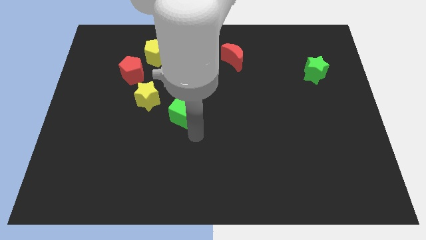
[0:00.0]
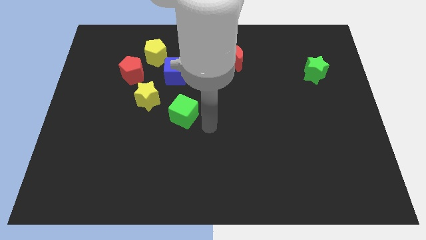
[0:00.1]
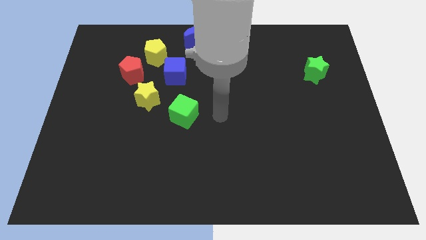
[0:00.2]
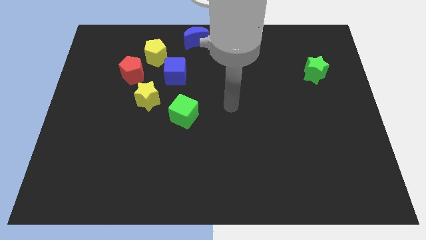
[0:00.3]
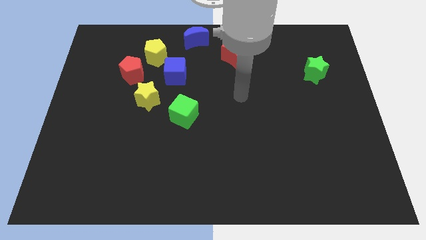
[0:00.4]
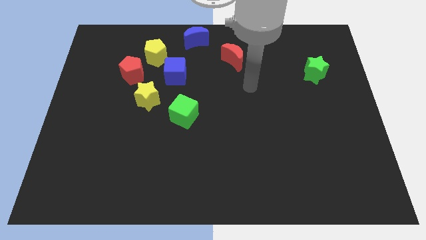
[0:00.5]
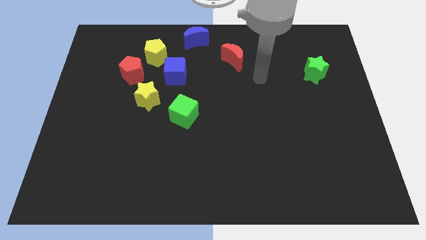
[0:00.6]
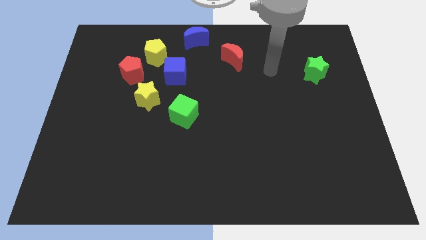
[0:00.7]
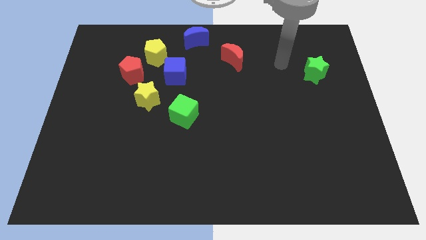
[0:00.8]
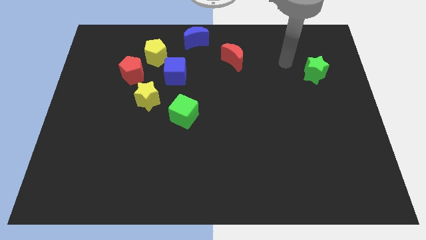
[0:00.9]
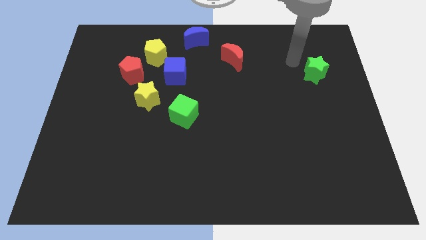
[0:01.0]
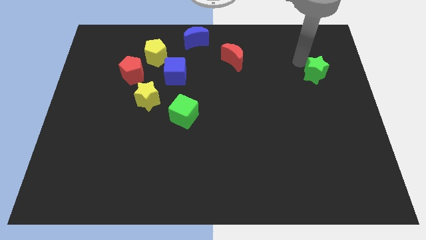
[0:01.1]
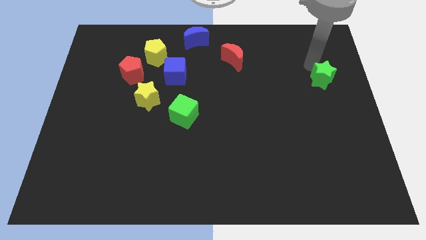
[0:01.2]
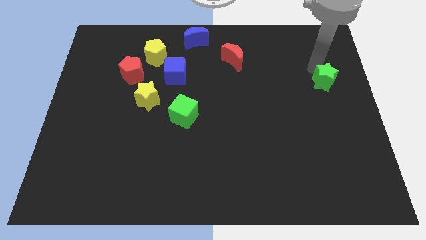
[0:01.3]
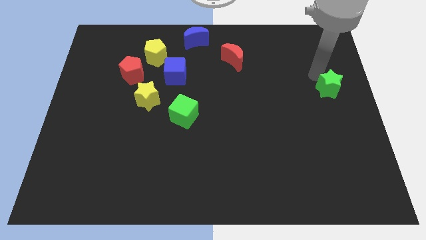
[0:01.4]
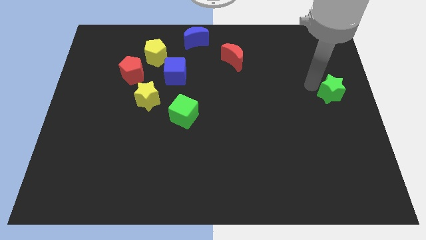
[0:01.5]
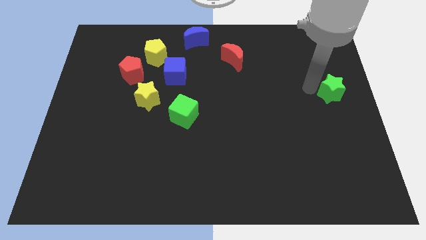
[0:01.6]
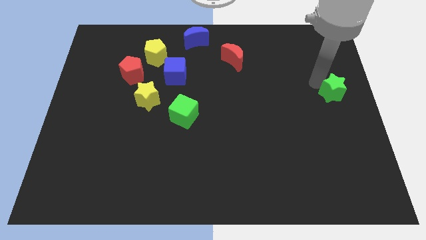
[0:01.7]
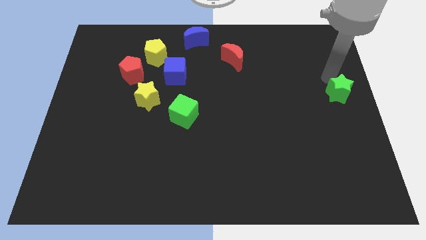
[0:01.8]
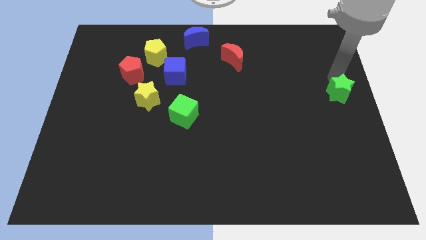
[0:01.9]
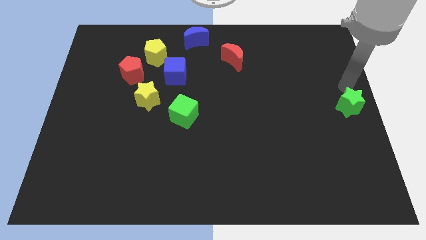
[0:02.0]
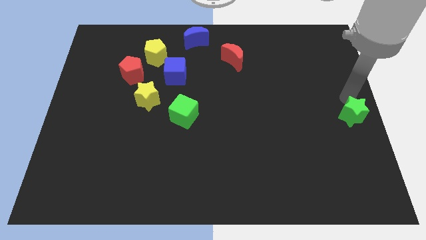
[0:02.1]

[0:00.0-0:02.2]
place the green star at the center right of the board

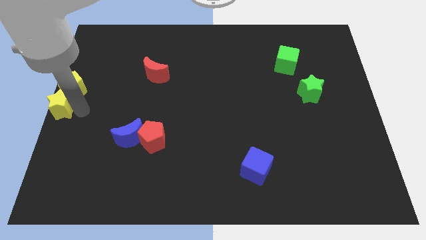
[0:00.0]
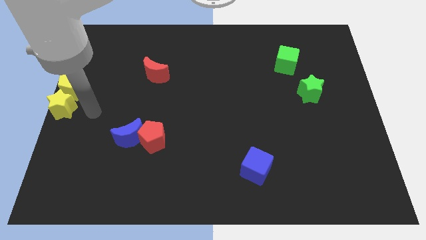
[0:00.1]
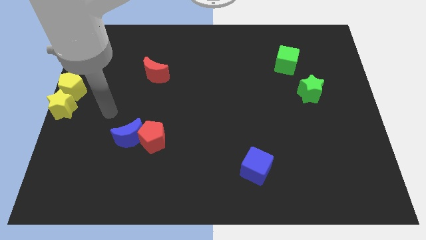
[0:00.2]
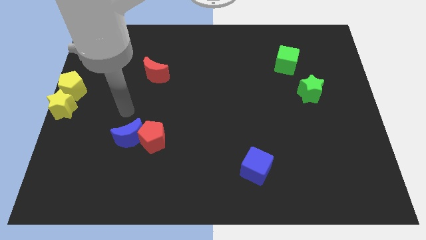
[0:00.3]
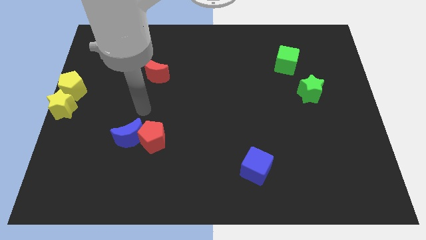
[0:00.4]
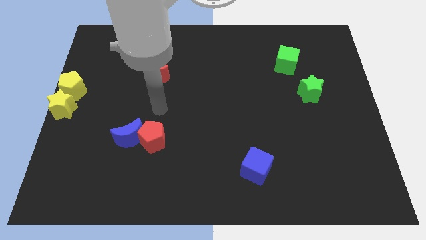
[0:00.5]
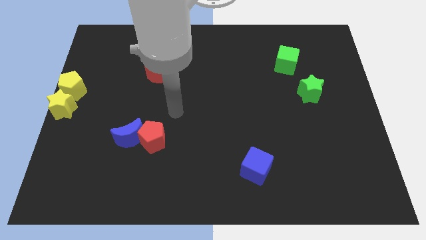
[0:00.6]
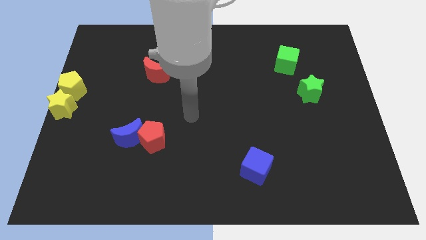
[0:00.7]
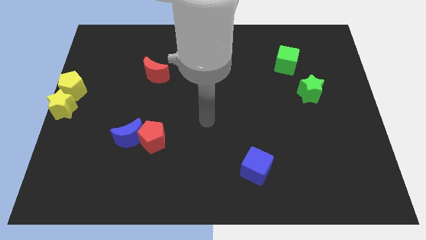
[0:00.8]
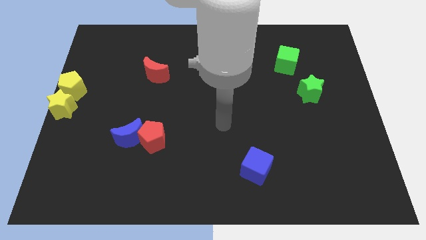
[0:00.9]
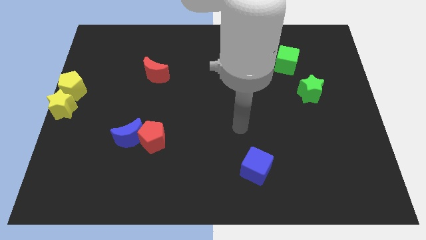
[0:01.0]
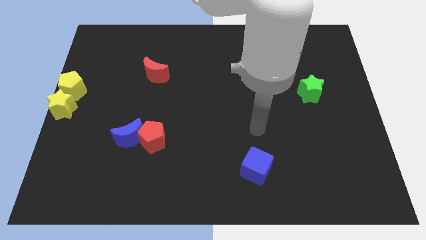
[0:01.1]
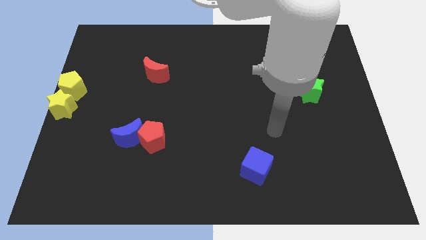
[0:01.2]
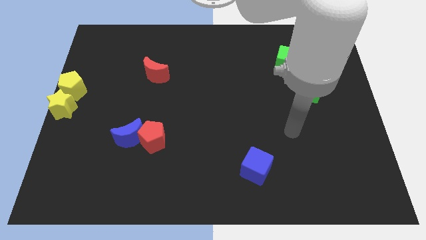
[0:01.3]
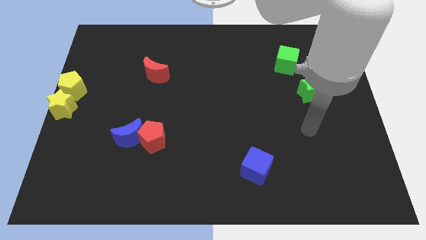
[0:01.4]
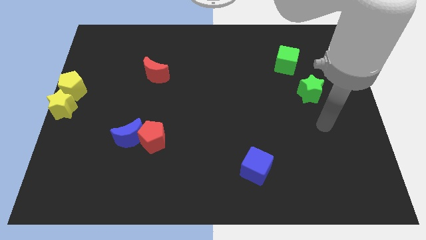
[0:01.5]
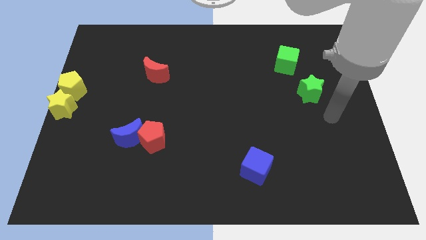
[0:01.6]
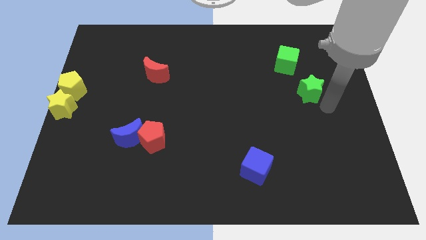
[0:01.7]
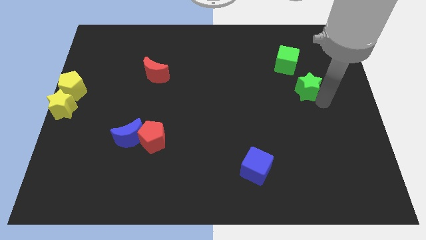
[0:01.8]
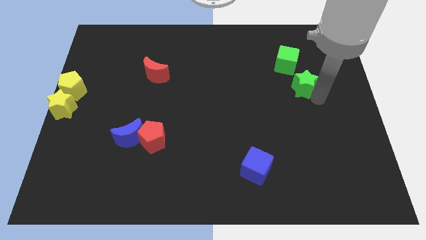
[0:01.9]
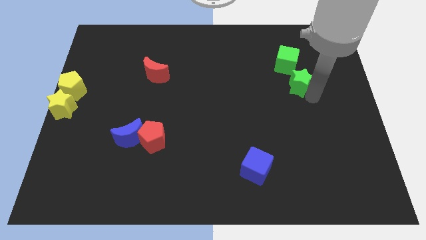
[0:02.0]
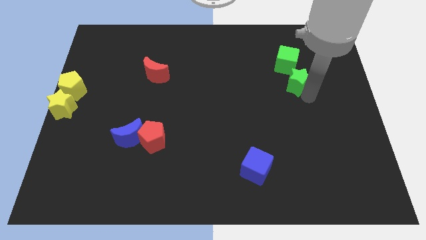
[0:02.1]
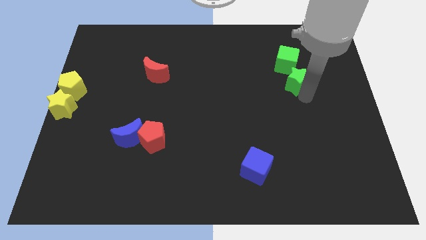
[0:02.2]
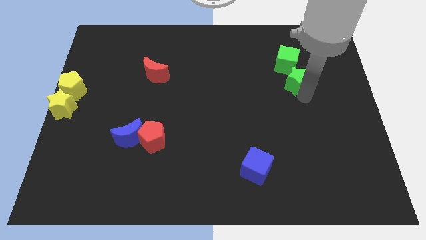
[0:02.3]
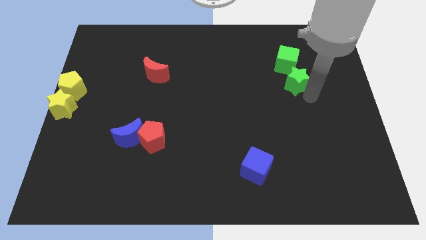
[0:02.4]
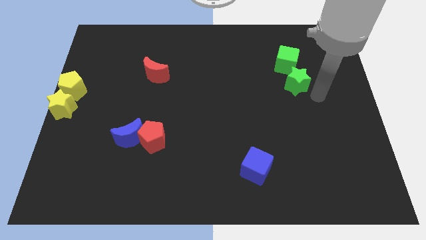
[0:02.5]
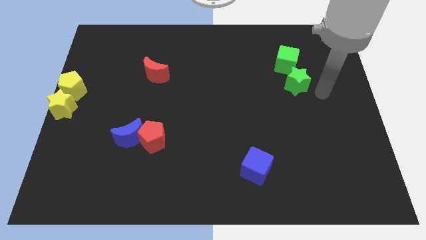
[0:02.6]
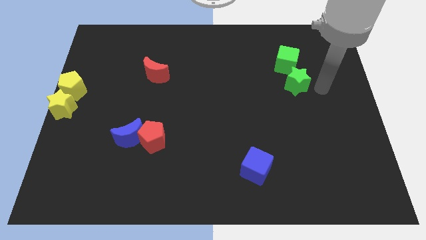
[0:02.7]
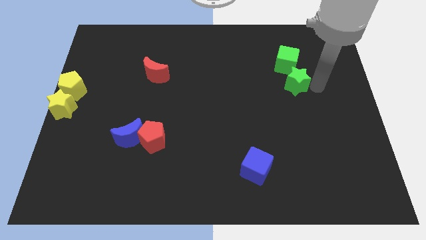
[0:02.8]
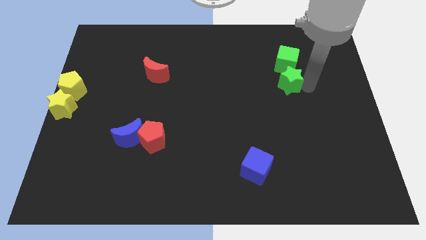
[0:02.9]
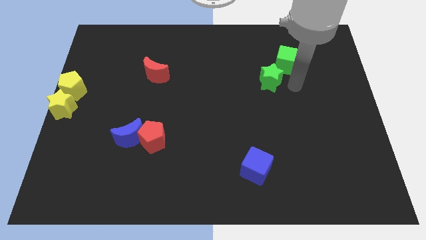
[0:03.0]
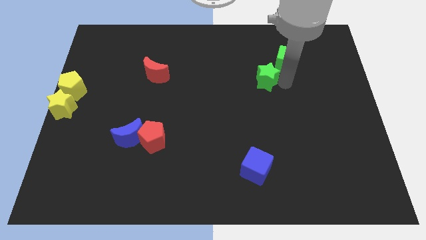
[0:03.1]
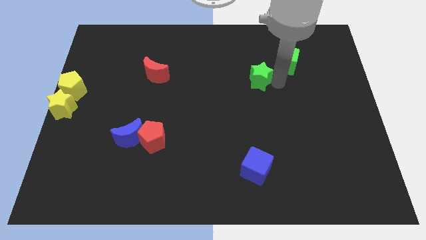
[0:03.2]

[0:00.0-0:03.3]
push the green star to the bottom left of the green cube

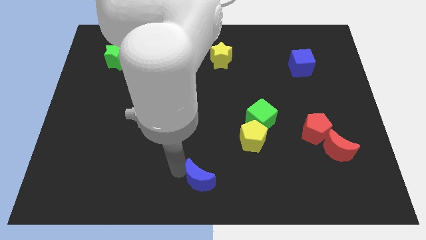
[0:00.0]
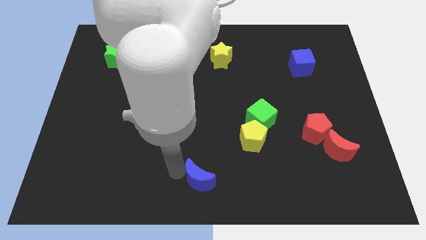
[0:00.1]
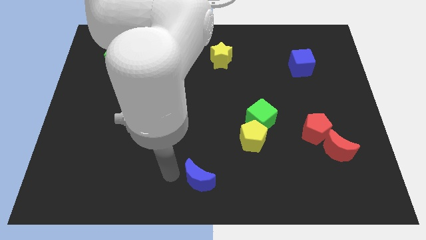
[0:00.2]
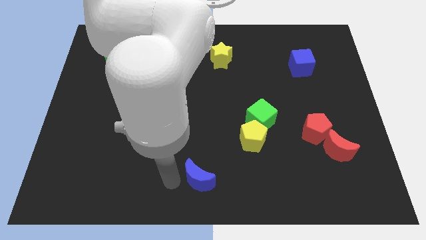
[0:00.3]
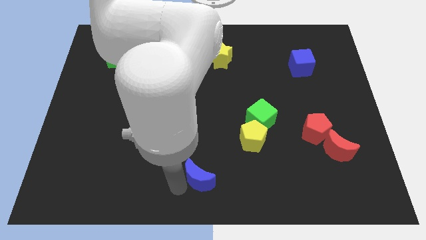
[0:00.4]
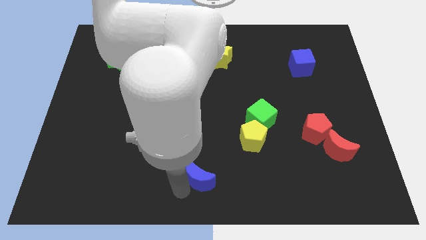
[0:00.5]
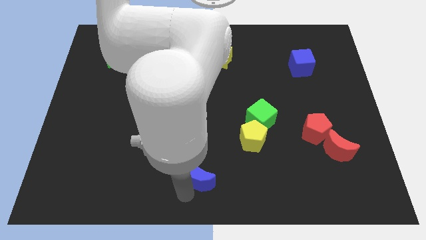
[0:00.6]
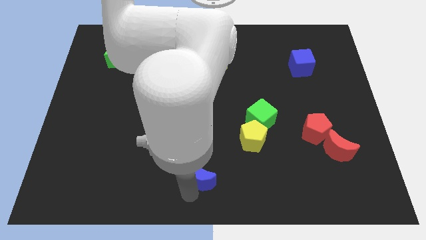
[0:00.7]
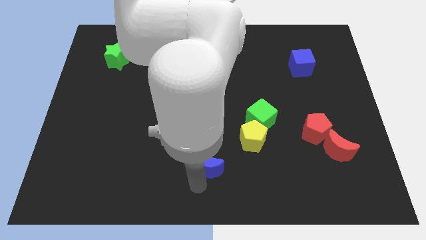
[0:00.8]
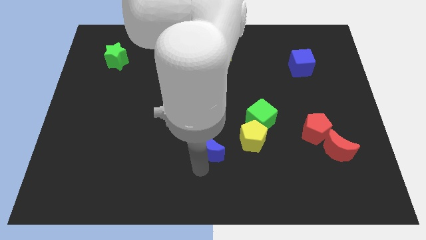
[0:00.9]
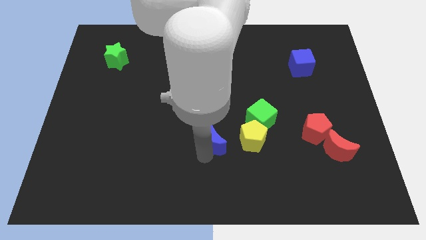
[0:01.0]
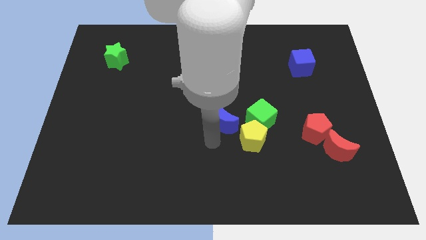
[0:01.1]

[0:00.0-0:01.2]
push the blue crescent to the left of the yellow pentagon

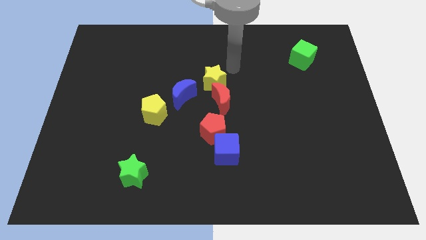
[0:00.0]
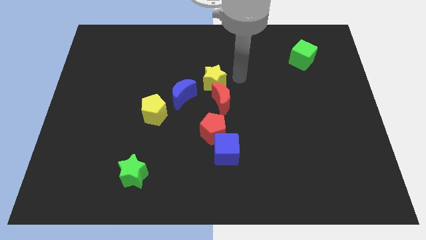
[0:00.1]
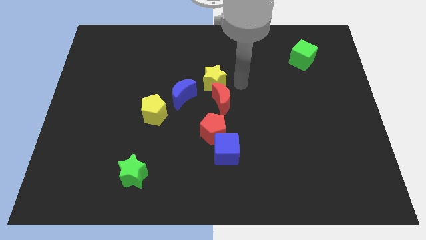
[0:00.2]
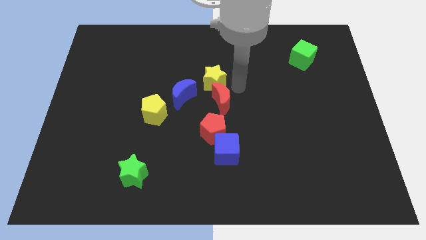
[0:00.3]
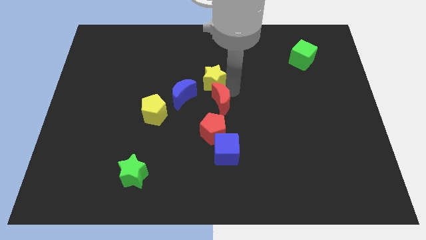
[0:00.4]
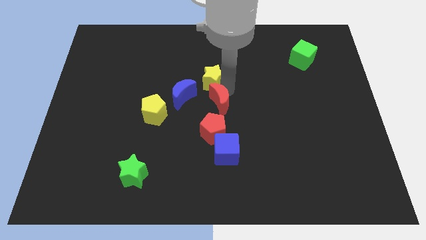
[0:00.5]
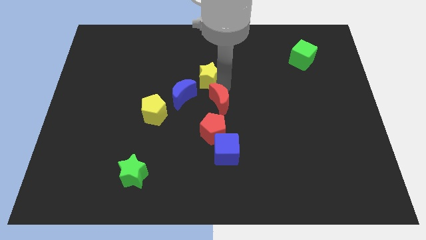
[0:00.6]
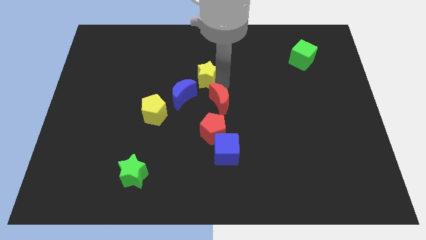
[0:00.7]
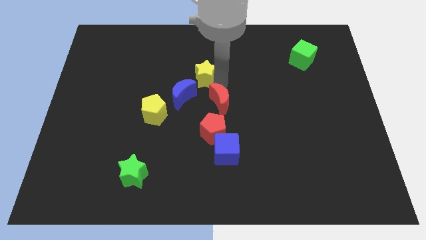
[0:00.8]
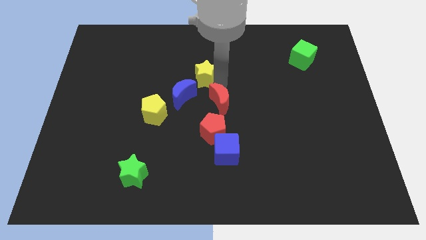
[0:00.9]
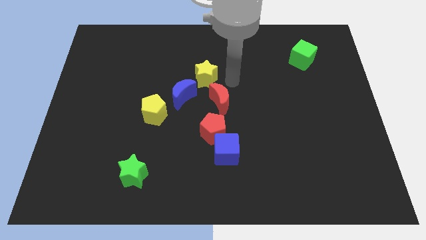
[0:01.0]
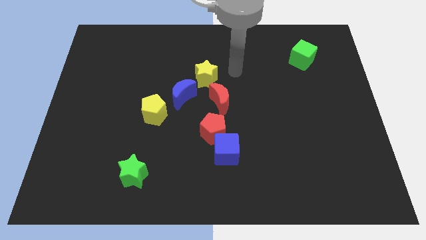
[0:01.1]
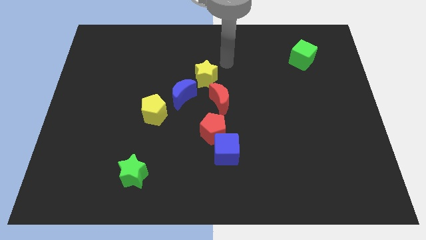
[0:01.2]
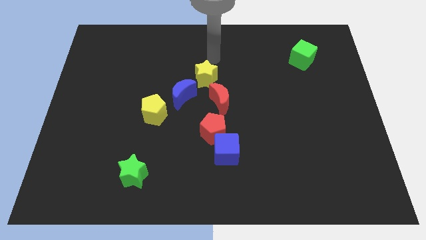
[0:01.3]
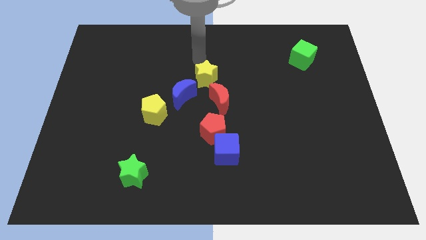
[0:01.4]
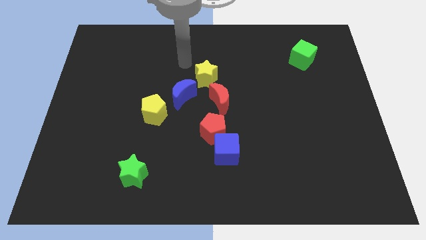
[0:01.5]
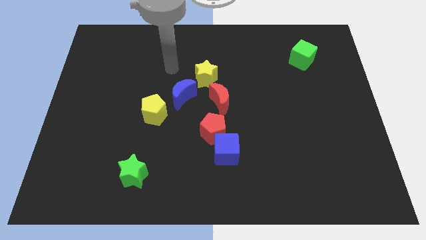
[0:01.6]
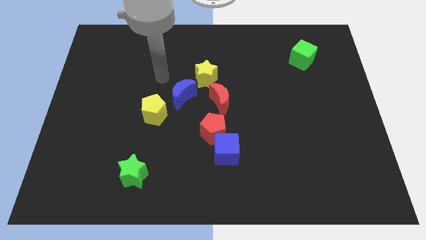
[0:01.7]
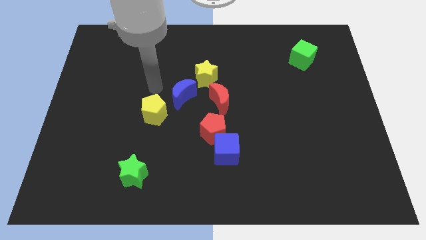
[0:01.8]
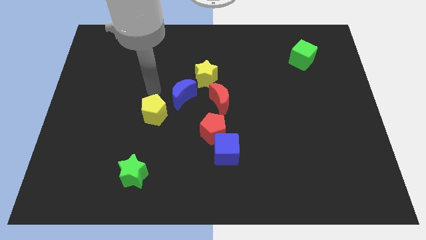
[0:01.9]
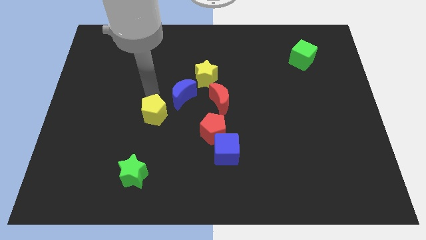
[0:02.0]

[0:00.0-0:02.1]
move yellow star on top of red crescent

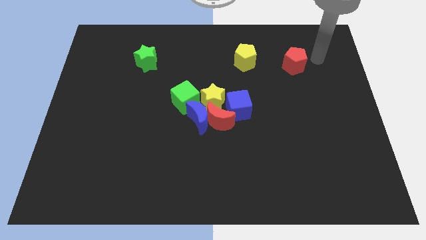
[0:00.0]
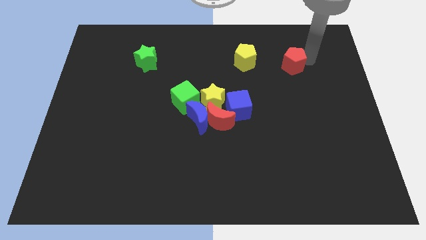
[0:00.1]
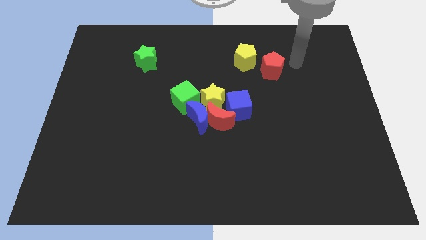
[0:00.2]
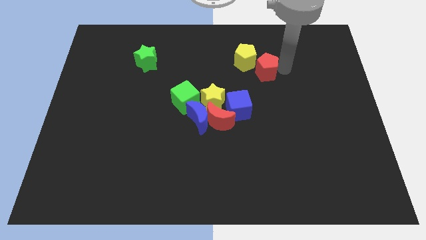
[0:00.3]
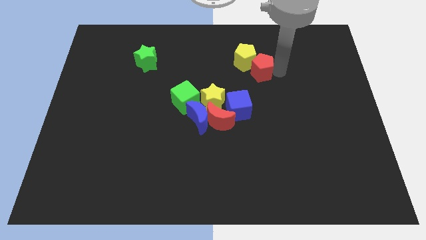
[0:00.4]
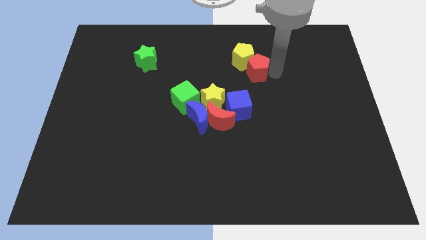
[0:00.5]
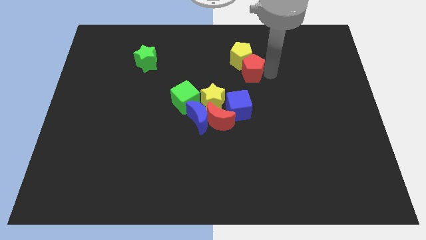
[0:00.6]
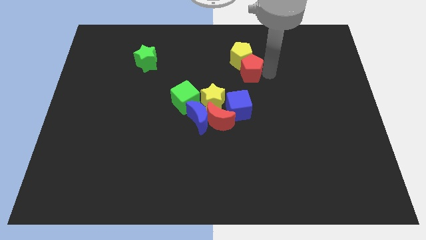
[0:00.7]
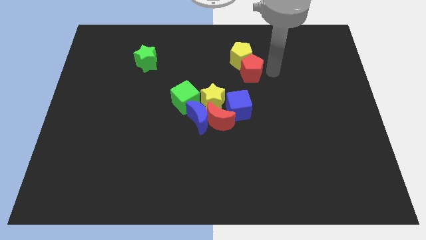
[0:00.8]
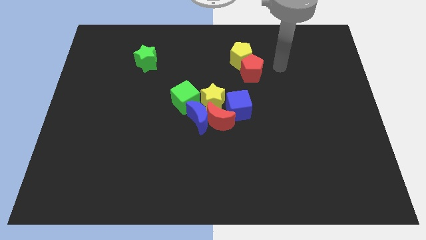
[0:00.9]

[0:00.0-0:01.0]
push the red pentagon into the yellow pentagon
